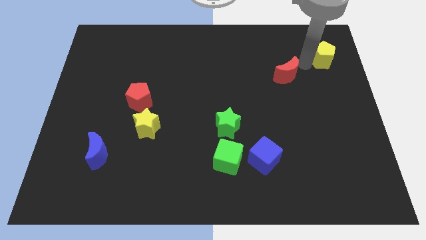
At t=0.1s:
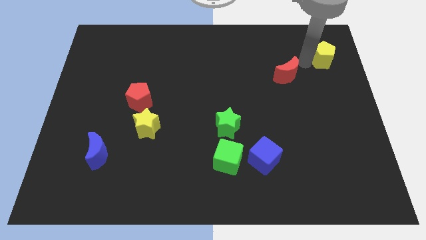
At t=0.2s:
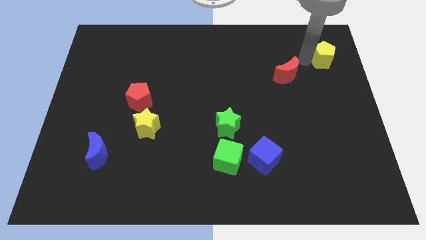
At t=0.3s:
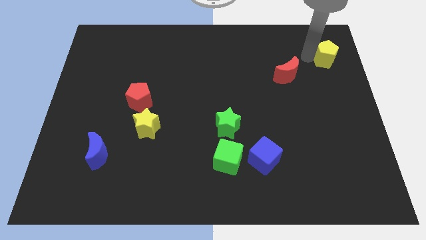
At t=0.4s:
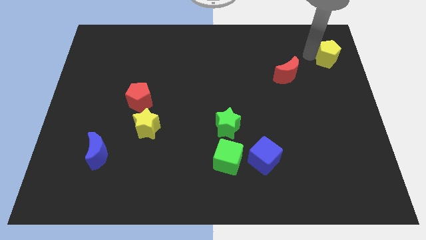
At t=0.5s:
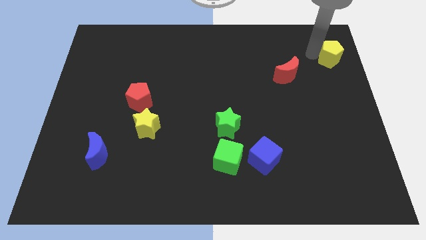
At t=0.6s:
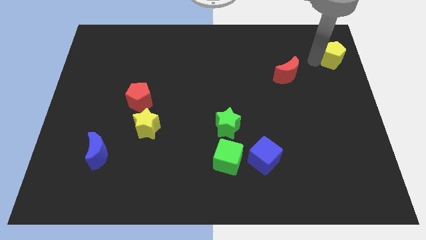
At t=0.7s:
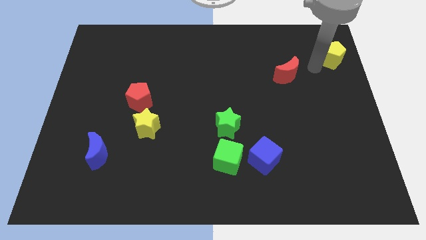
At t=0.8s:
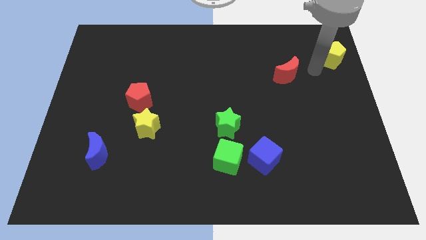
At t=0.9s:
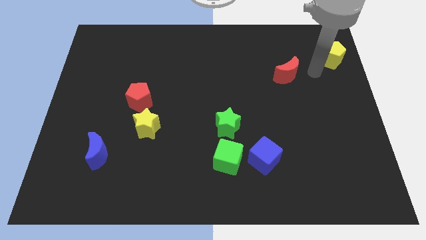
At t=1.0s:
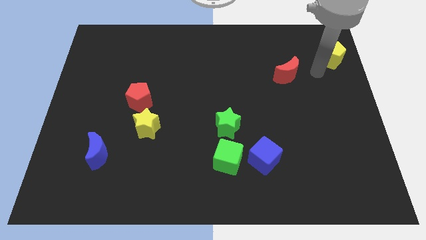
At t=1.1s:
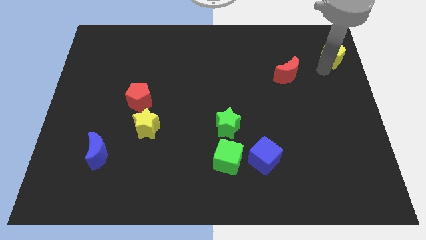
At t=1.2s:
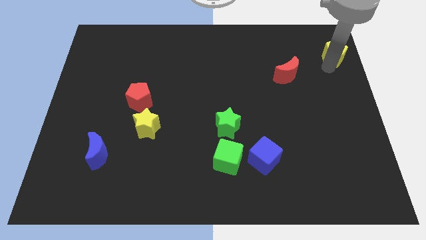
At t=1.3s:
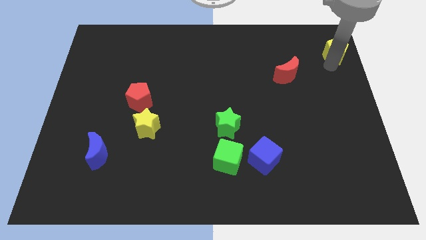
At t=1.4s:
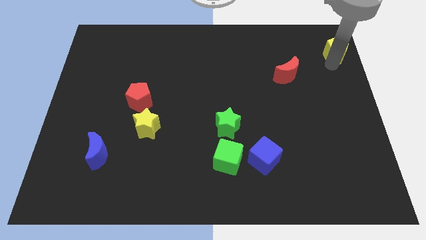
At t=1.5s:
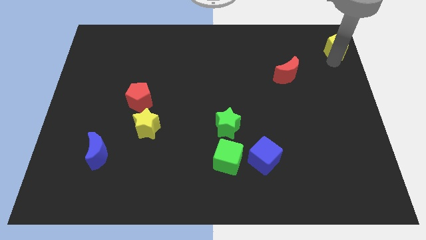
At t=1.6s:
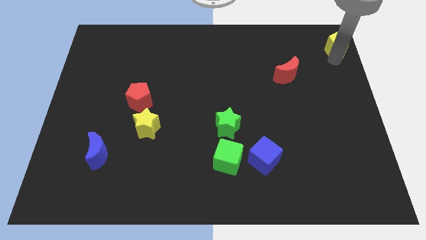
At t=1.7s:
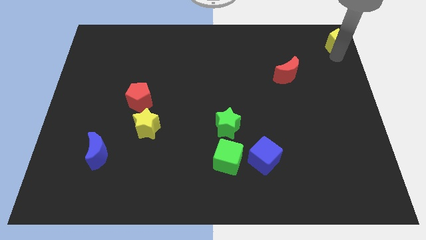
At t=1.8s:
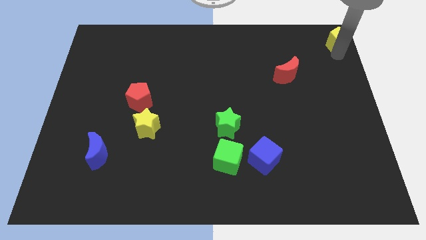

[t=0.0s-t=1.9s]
move the yellow pentagon to the top right corner

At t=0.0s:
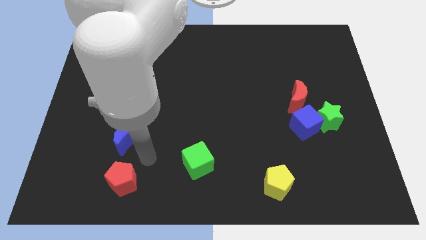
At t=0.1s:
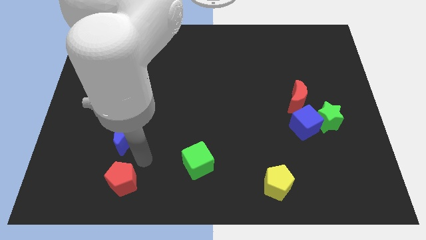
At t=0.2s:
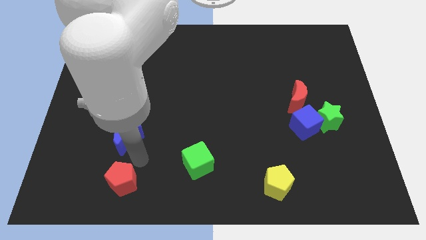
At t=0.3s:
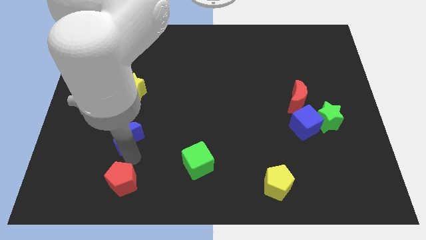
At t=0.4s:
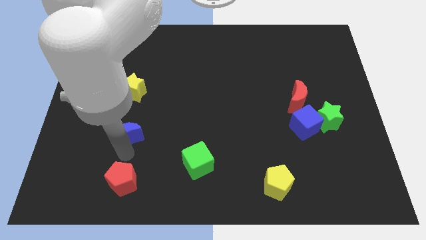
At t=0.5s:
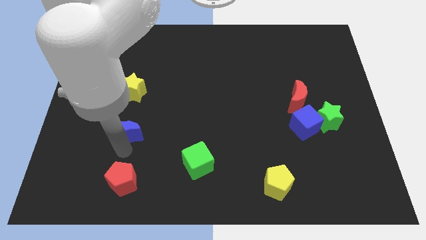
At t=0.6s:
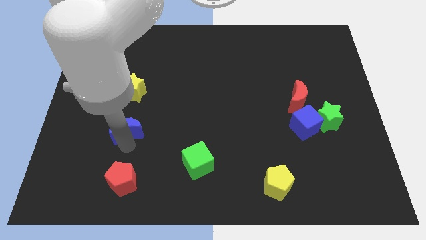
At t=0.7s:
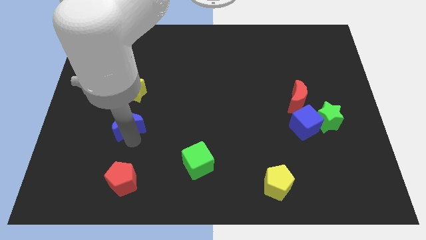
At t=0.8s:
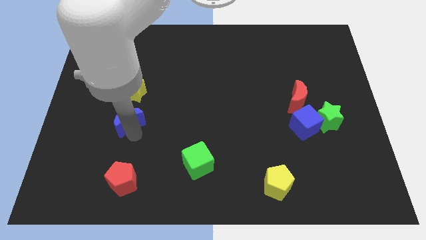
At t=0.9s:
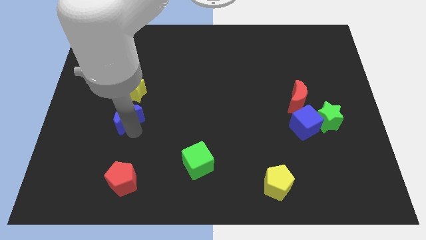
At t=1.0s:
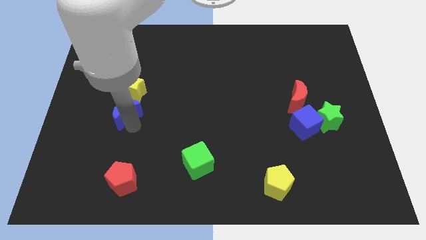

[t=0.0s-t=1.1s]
push the blue moon towards the yellow star

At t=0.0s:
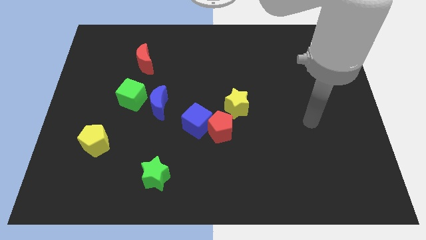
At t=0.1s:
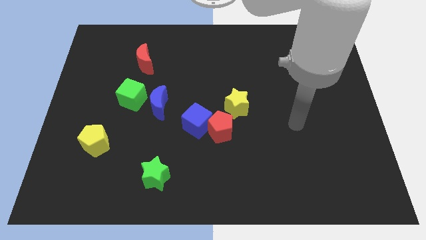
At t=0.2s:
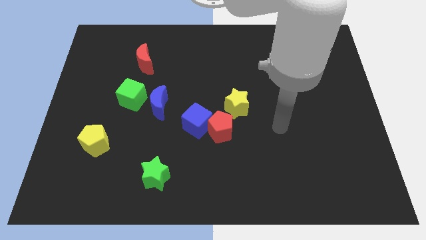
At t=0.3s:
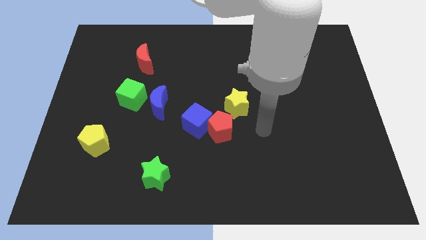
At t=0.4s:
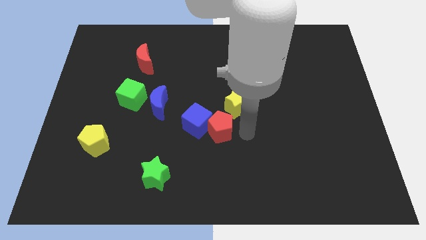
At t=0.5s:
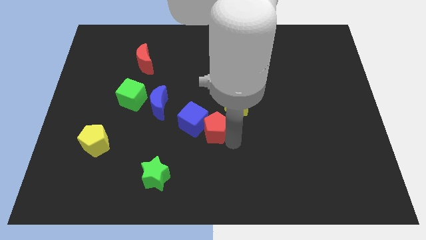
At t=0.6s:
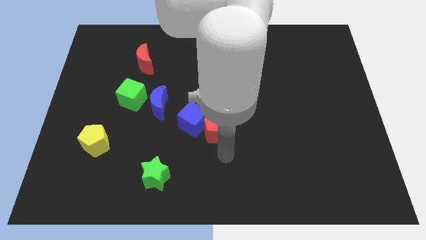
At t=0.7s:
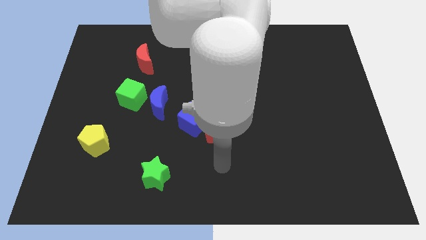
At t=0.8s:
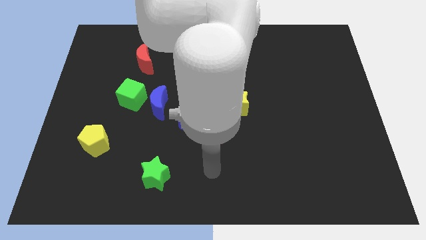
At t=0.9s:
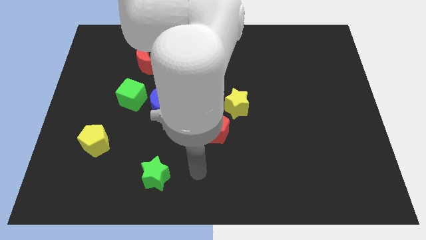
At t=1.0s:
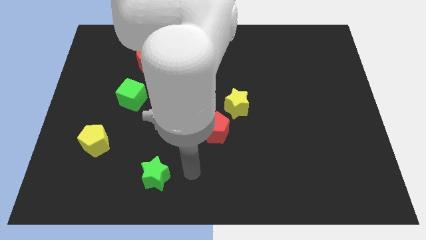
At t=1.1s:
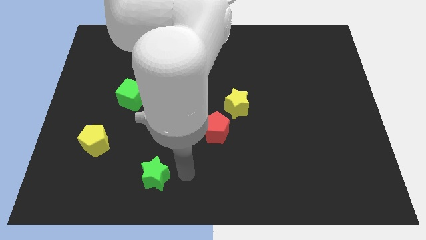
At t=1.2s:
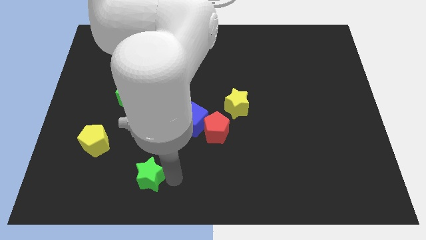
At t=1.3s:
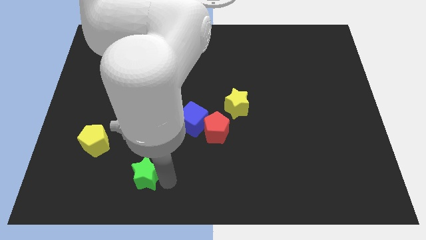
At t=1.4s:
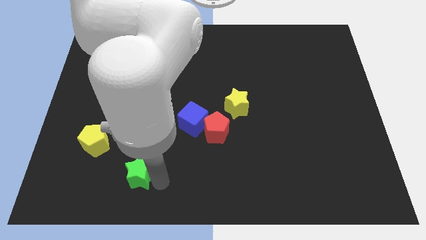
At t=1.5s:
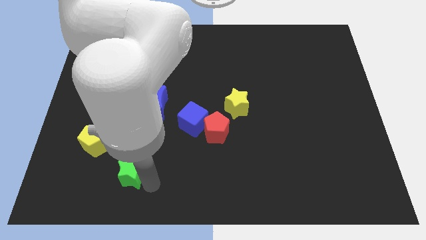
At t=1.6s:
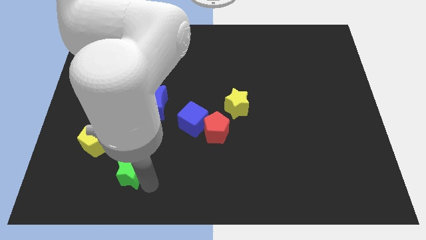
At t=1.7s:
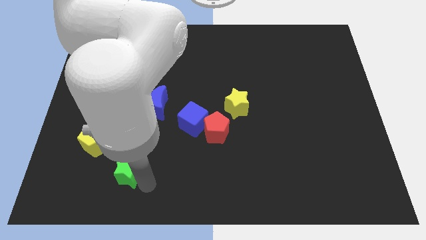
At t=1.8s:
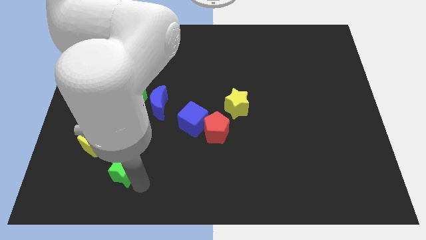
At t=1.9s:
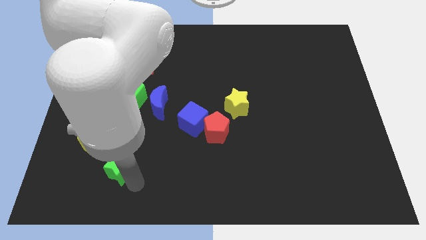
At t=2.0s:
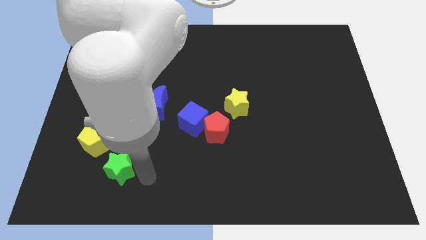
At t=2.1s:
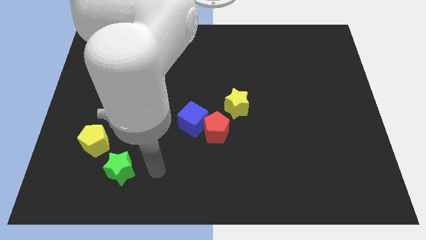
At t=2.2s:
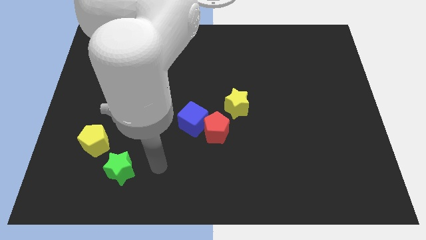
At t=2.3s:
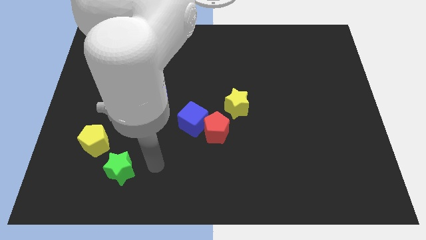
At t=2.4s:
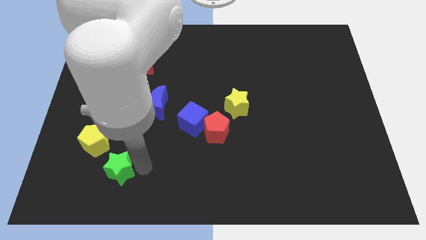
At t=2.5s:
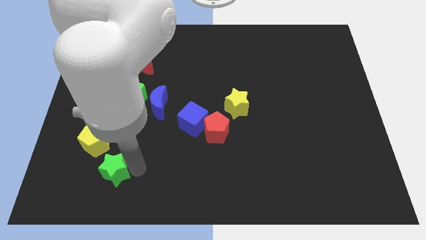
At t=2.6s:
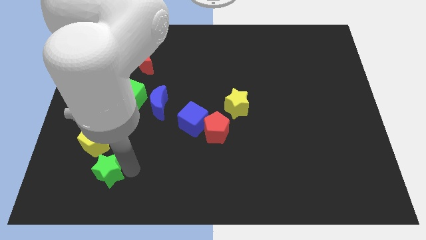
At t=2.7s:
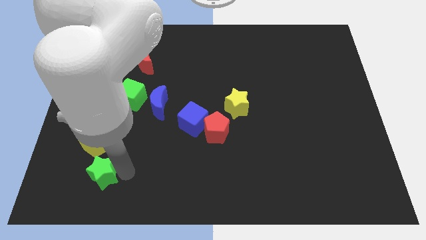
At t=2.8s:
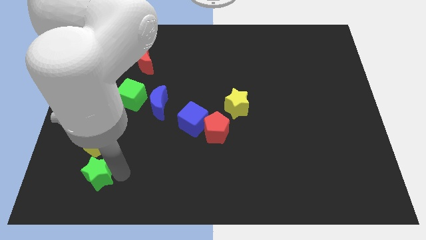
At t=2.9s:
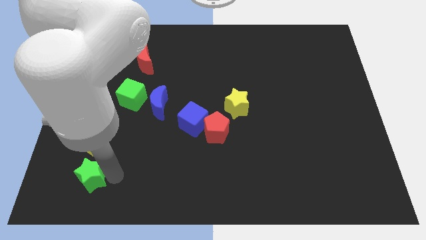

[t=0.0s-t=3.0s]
place the green star below the yellow pentagon

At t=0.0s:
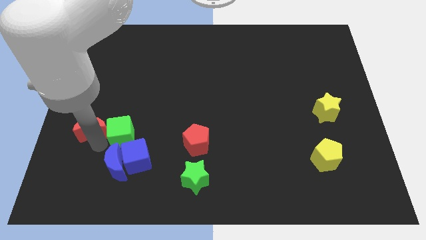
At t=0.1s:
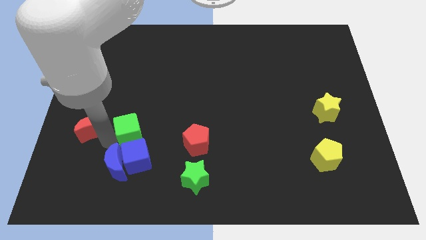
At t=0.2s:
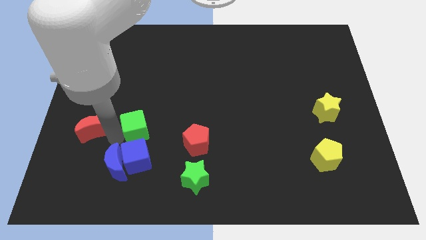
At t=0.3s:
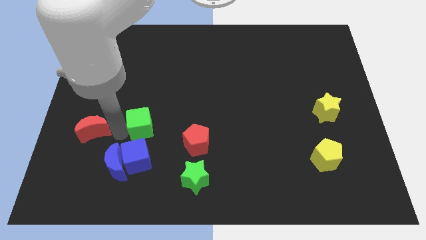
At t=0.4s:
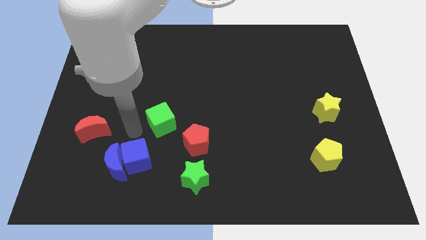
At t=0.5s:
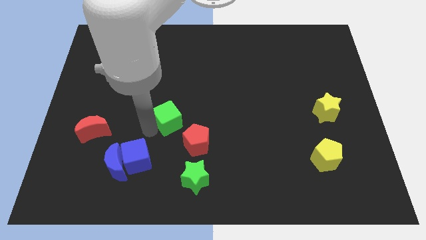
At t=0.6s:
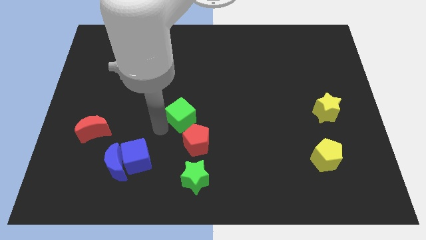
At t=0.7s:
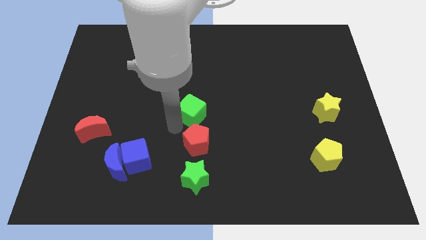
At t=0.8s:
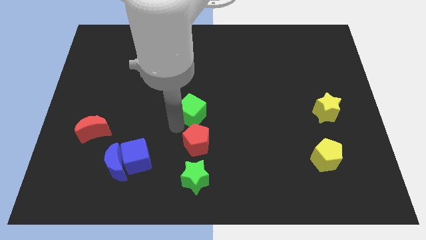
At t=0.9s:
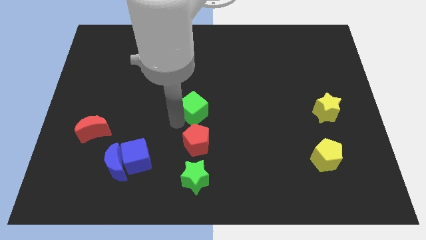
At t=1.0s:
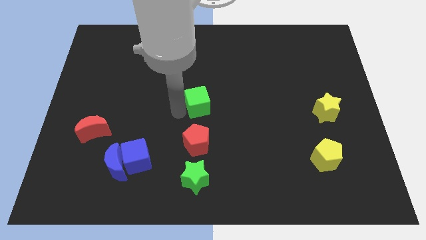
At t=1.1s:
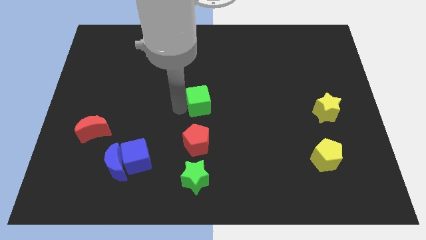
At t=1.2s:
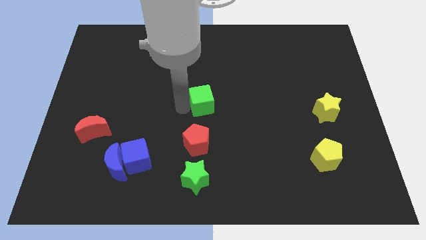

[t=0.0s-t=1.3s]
move the green cube above the red pentagon

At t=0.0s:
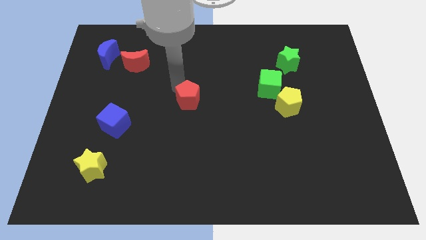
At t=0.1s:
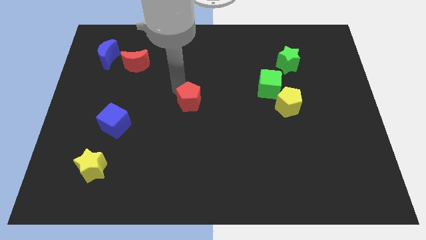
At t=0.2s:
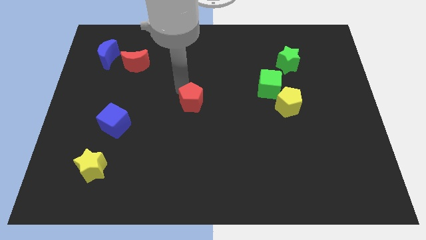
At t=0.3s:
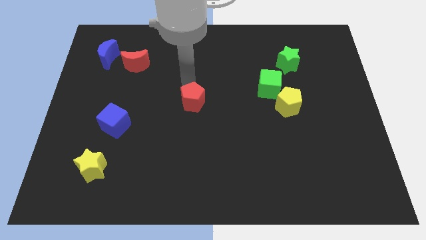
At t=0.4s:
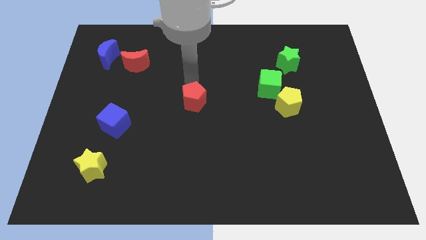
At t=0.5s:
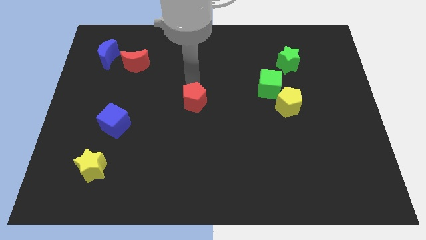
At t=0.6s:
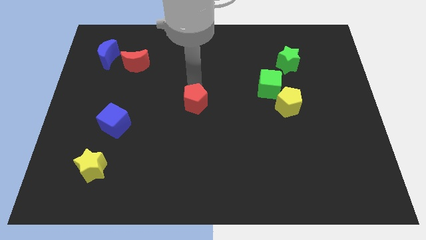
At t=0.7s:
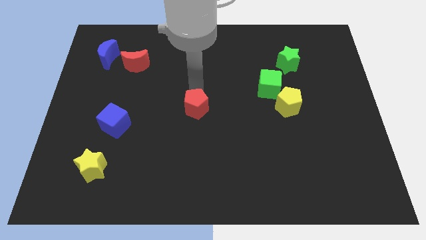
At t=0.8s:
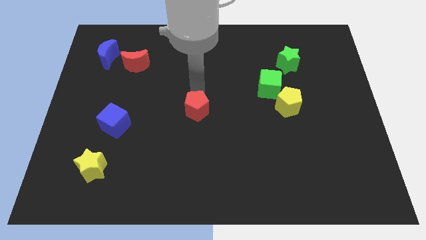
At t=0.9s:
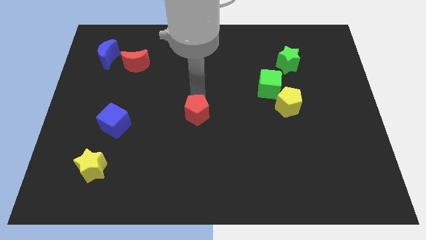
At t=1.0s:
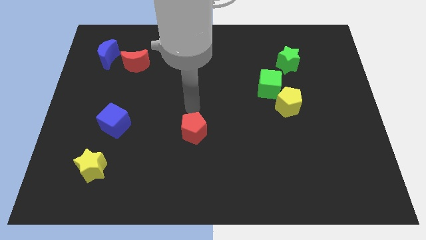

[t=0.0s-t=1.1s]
push the red pentagon to the right of the blue cube

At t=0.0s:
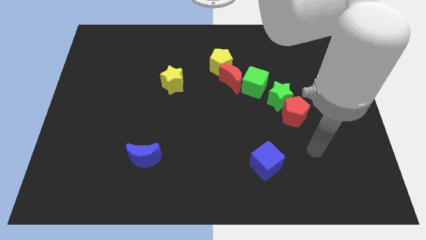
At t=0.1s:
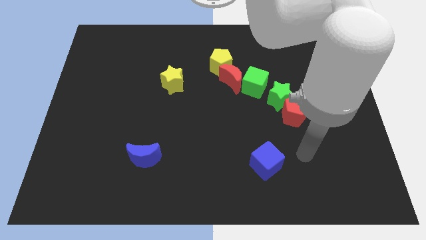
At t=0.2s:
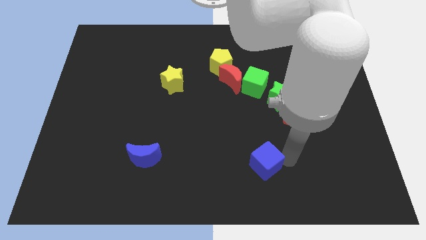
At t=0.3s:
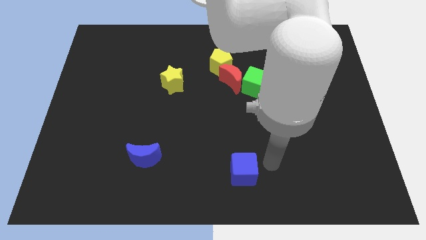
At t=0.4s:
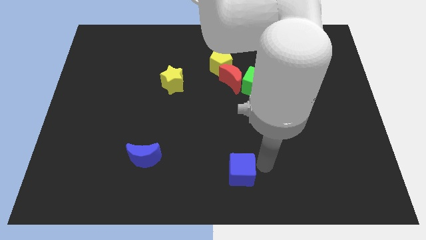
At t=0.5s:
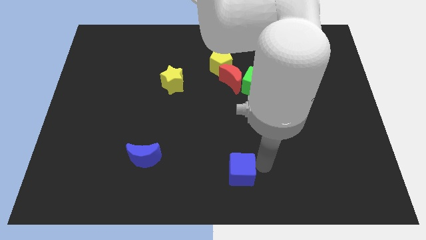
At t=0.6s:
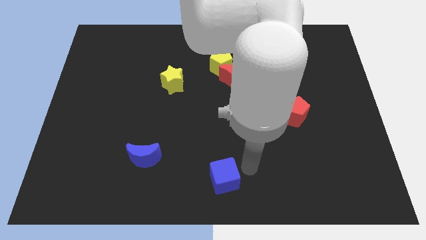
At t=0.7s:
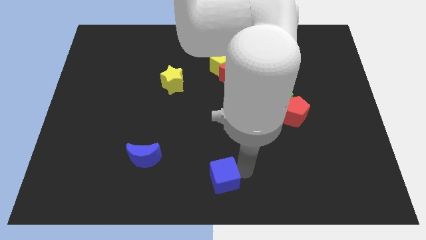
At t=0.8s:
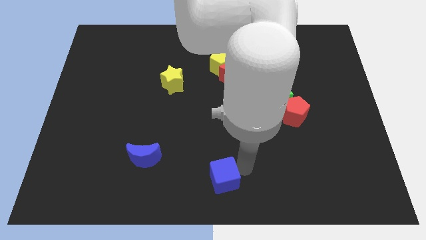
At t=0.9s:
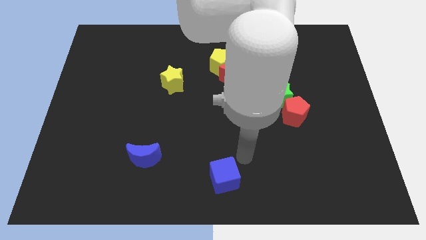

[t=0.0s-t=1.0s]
put the blue cube vertically at the bottom of the red crescent
